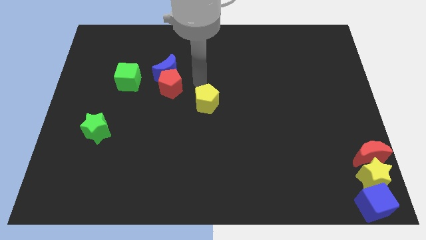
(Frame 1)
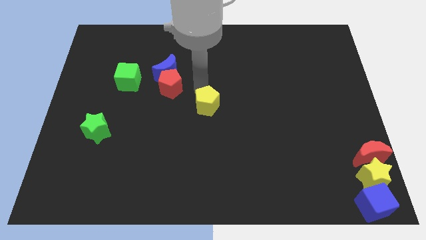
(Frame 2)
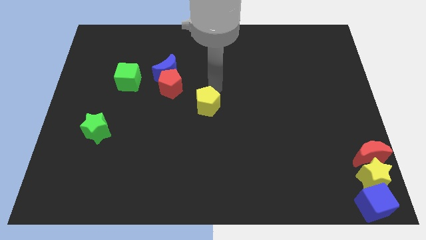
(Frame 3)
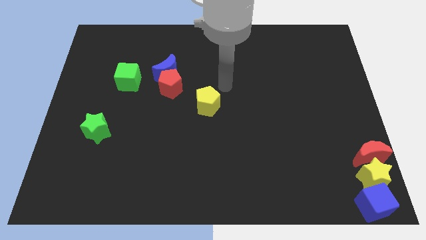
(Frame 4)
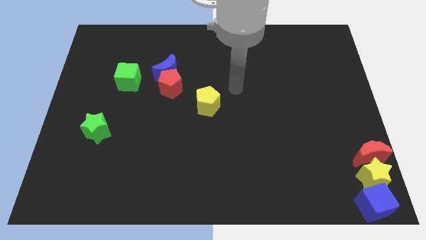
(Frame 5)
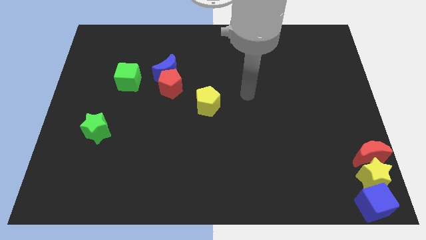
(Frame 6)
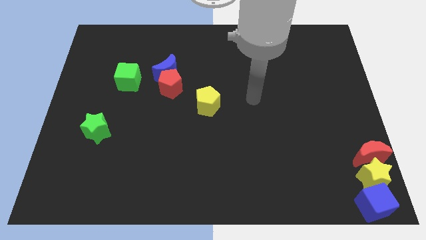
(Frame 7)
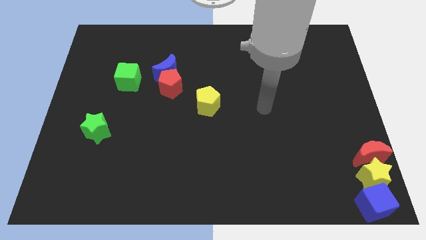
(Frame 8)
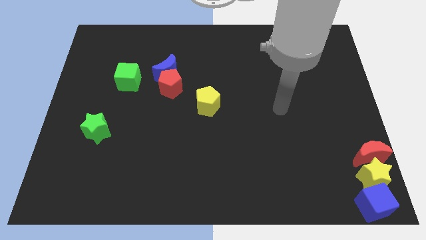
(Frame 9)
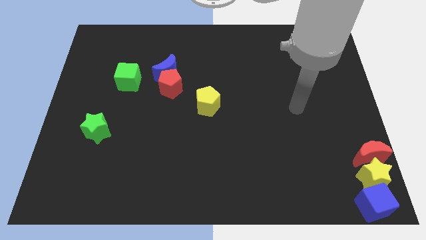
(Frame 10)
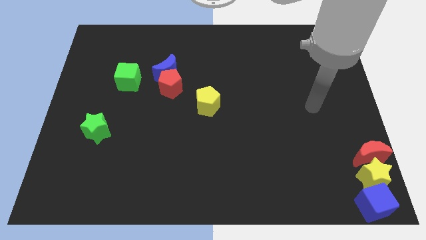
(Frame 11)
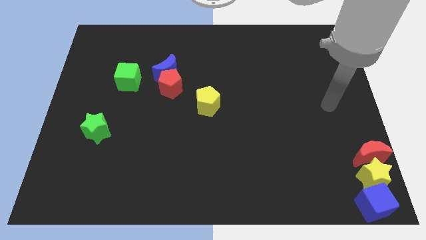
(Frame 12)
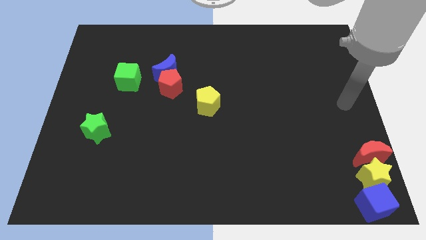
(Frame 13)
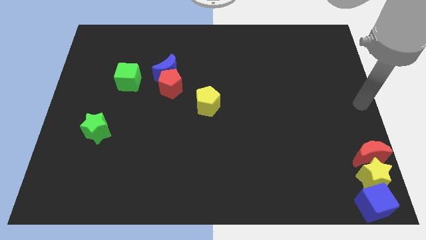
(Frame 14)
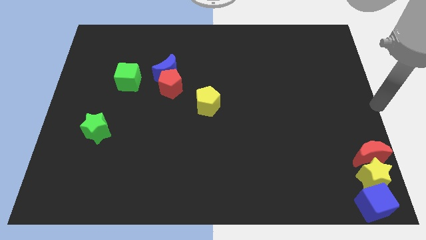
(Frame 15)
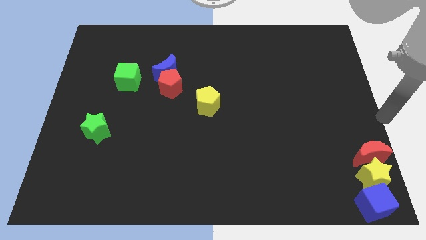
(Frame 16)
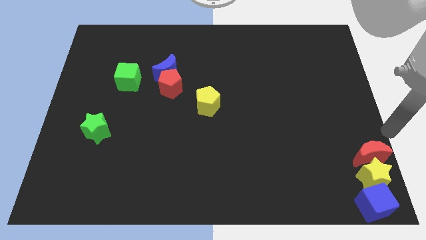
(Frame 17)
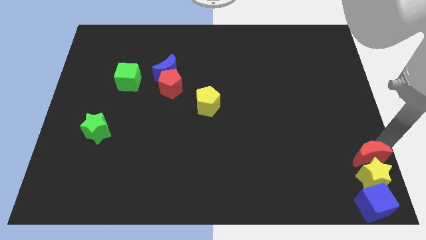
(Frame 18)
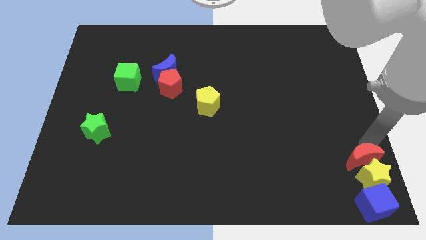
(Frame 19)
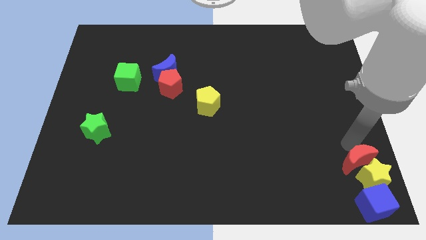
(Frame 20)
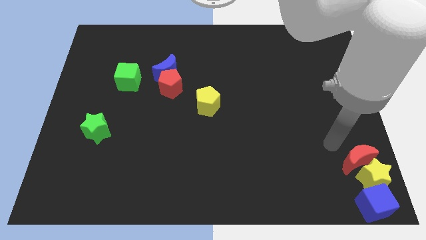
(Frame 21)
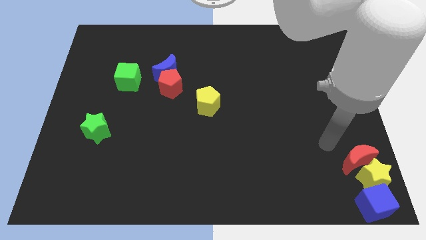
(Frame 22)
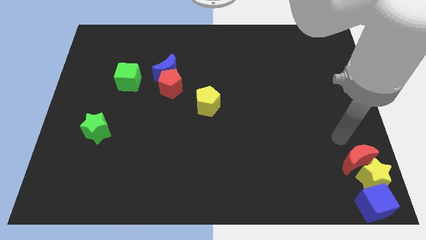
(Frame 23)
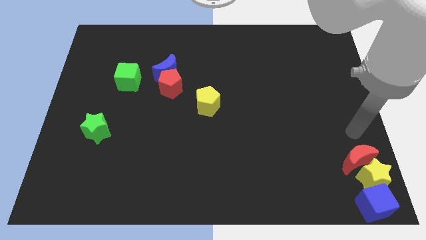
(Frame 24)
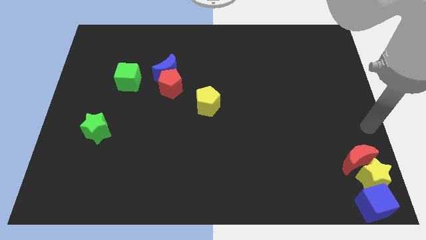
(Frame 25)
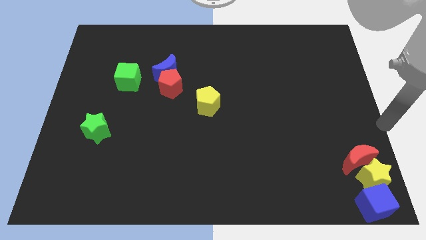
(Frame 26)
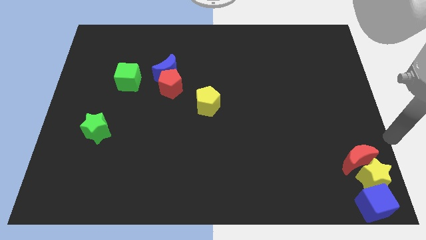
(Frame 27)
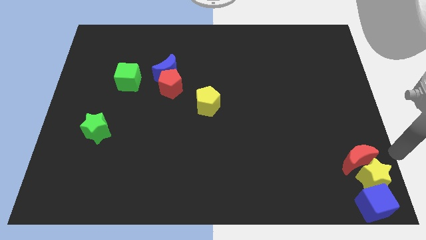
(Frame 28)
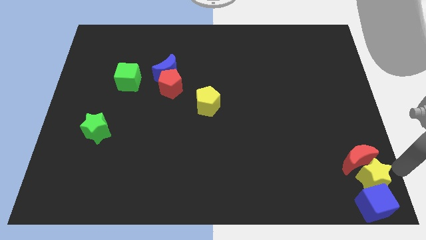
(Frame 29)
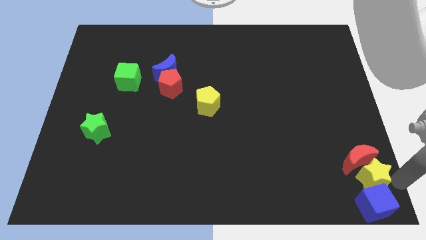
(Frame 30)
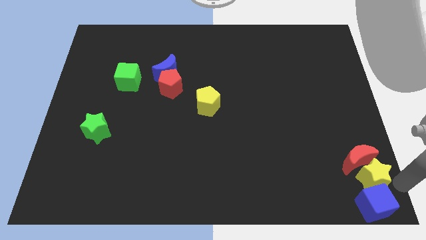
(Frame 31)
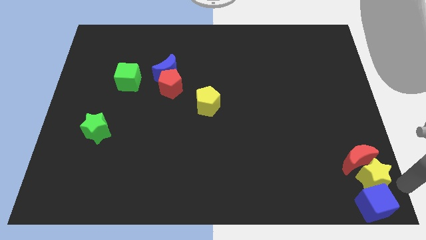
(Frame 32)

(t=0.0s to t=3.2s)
slightly push the yellow pentagon down

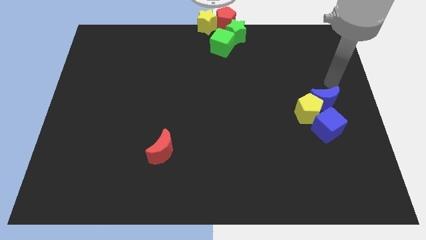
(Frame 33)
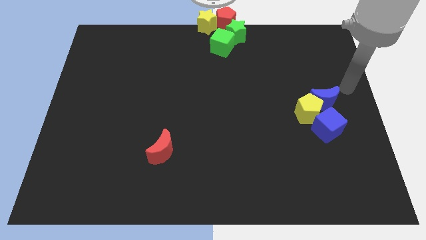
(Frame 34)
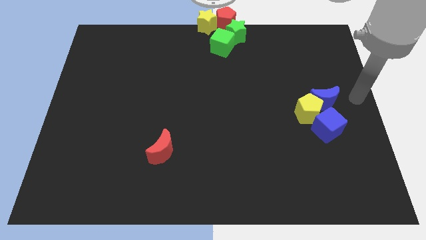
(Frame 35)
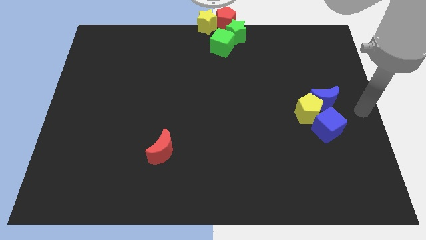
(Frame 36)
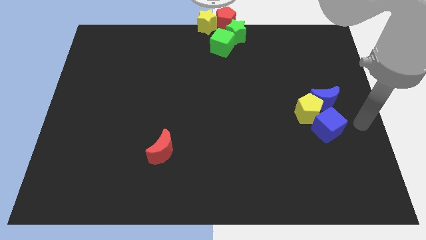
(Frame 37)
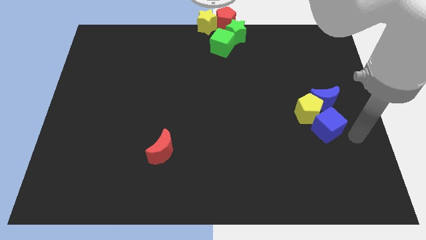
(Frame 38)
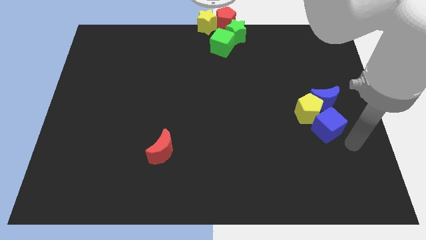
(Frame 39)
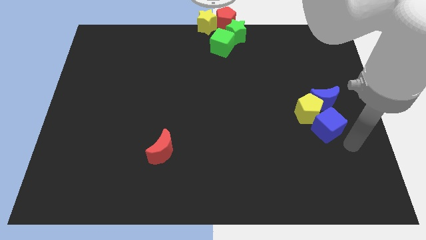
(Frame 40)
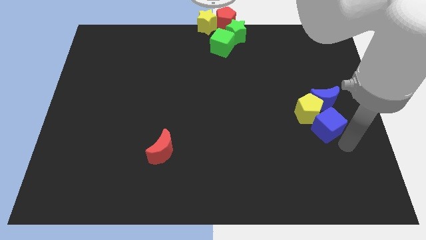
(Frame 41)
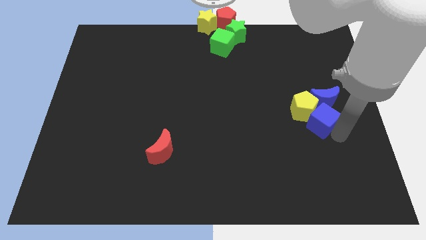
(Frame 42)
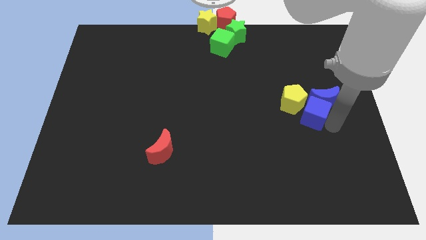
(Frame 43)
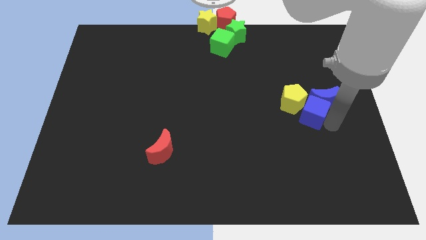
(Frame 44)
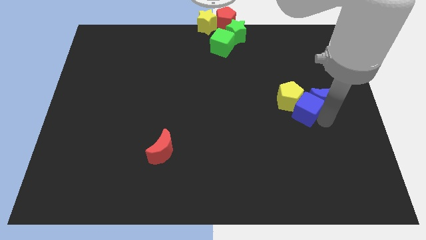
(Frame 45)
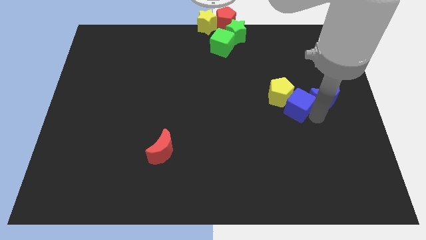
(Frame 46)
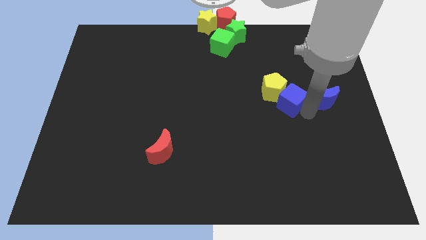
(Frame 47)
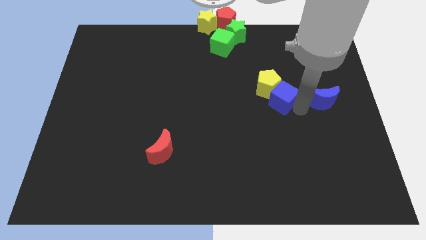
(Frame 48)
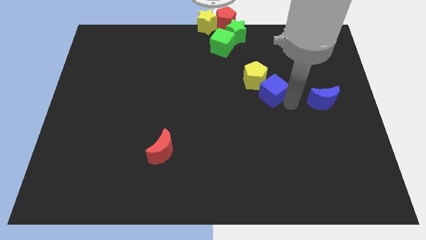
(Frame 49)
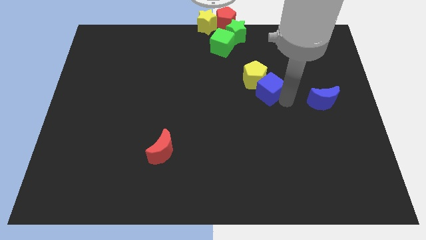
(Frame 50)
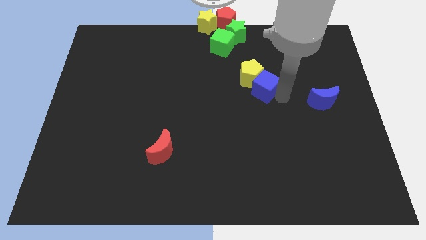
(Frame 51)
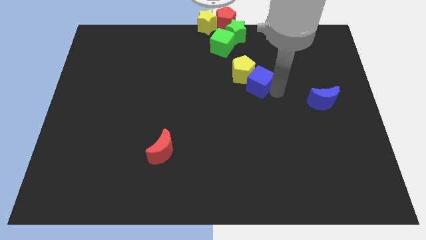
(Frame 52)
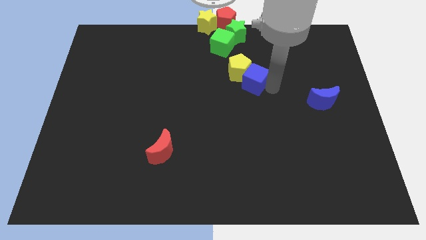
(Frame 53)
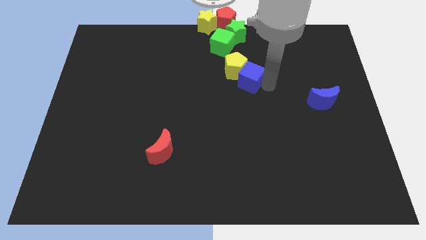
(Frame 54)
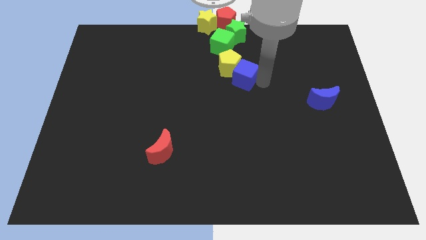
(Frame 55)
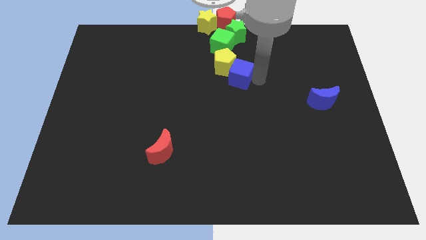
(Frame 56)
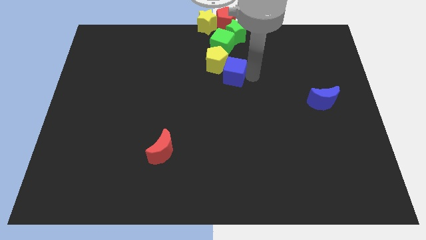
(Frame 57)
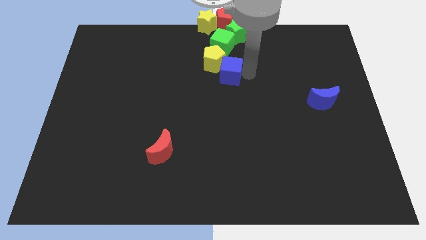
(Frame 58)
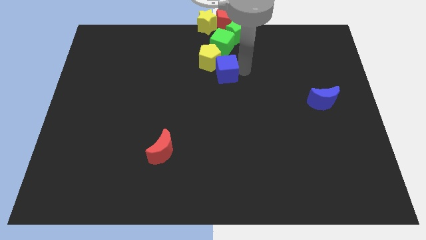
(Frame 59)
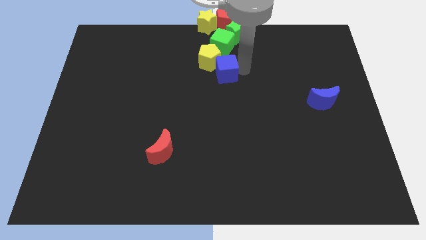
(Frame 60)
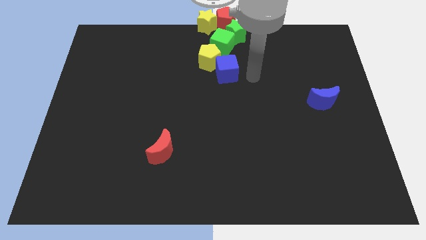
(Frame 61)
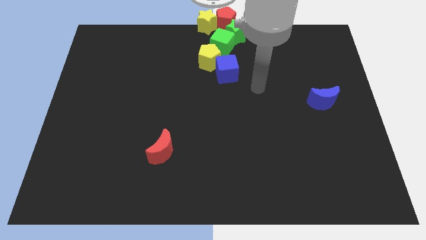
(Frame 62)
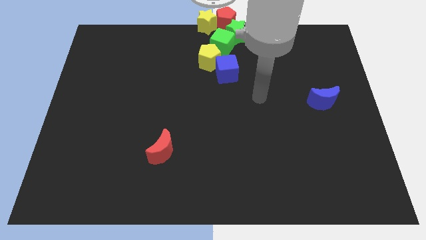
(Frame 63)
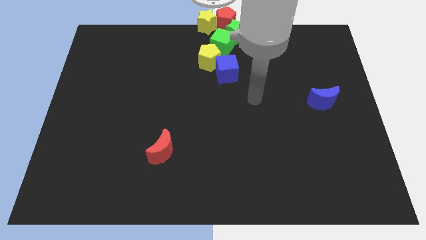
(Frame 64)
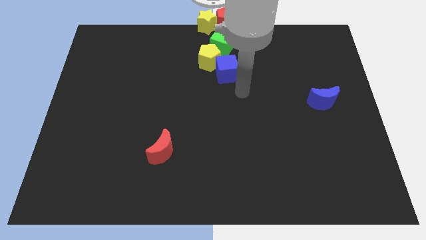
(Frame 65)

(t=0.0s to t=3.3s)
slide the green cube and yellow pentagon towards the top center

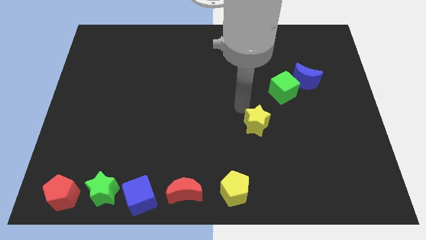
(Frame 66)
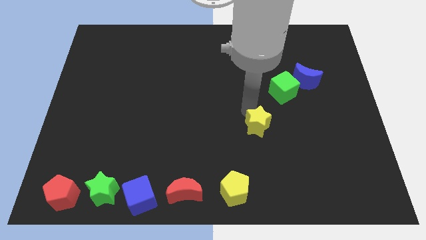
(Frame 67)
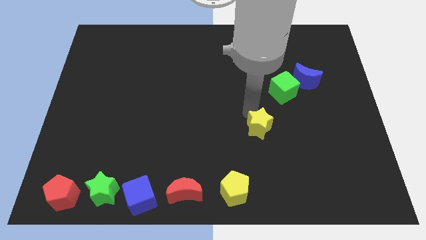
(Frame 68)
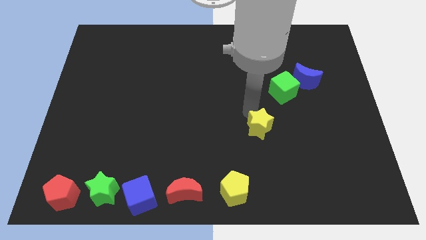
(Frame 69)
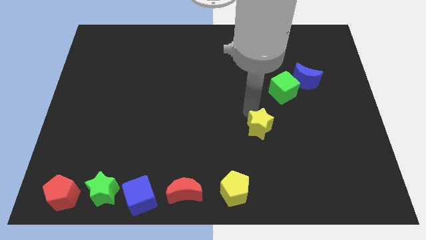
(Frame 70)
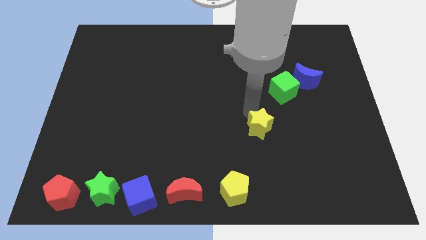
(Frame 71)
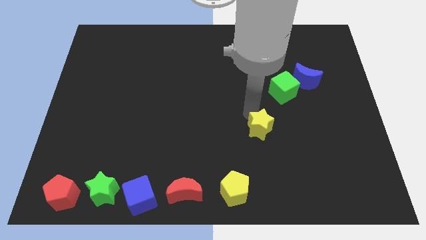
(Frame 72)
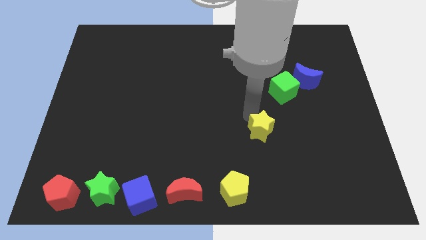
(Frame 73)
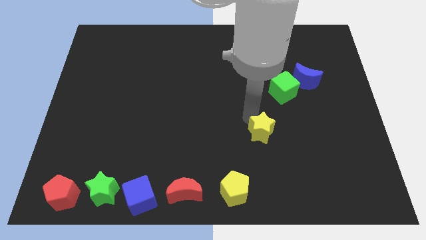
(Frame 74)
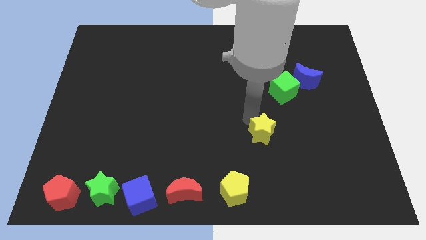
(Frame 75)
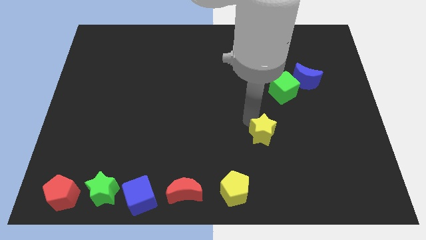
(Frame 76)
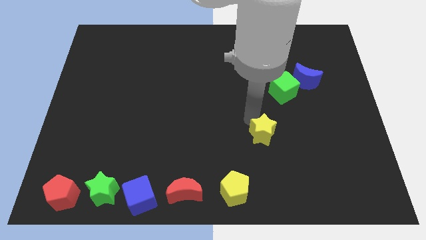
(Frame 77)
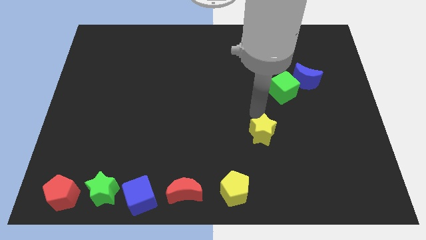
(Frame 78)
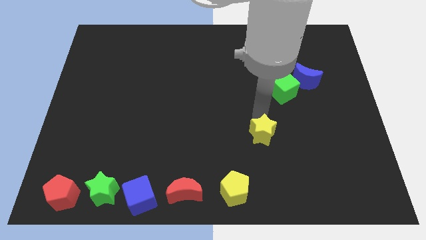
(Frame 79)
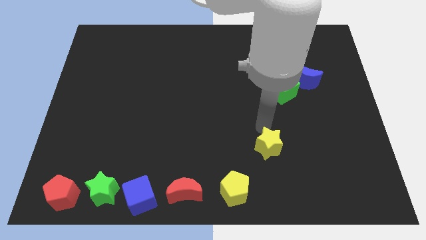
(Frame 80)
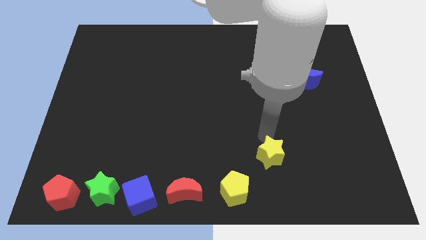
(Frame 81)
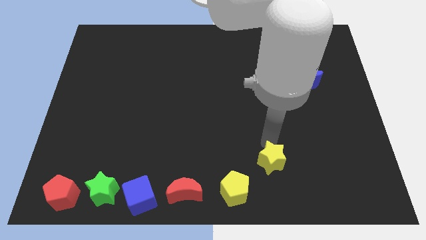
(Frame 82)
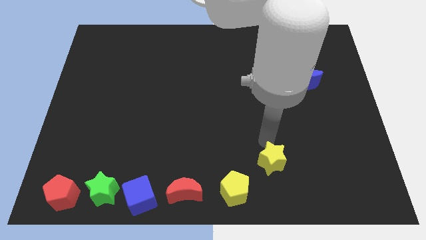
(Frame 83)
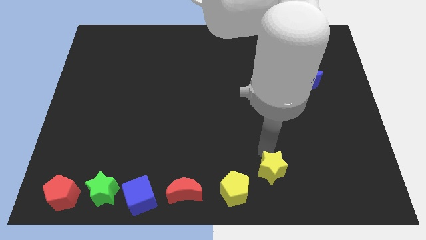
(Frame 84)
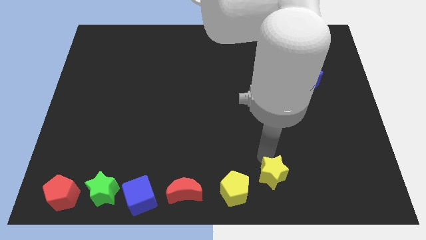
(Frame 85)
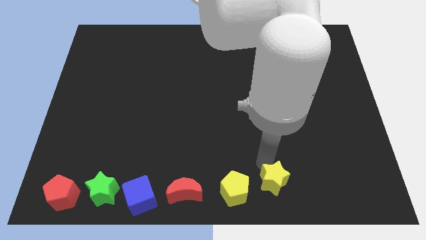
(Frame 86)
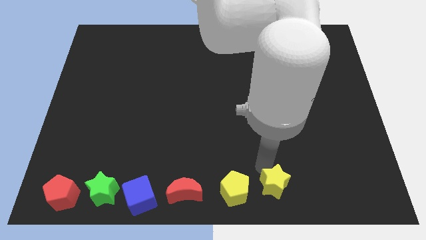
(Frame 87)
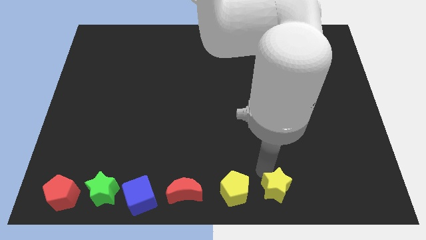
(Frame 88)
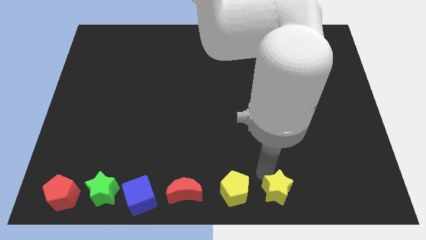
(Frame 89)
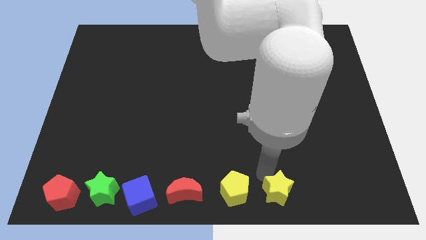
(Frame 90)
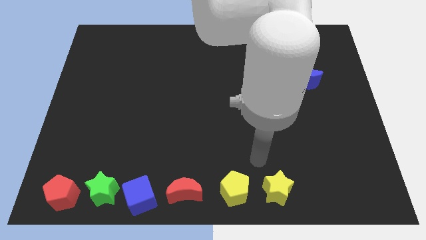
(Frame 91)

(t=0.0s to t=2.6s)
move the yellow star right to yellow pentagon
